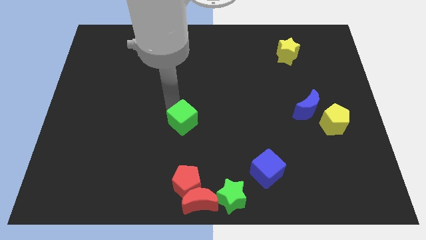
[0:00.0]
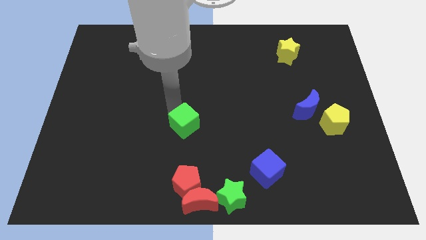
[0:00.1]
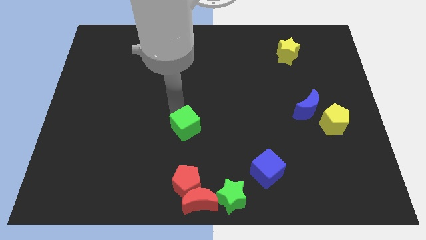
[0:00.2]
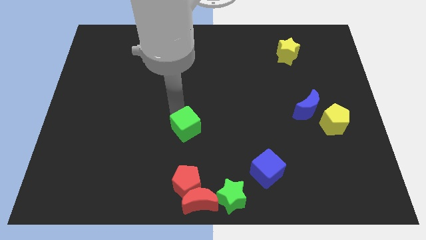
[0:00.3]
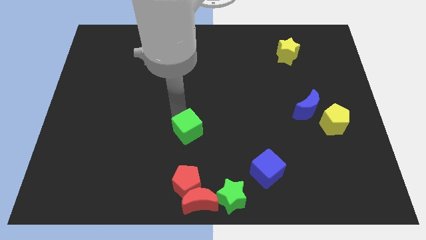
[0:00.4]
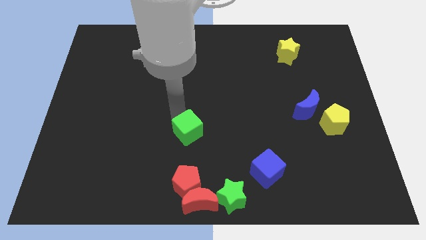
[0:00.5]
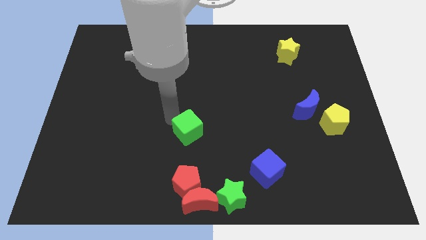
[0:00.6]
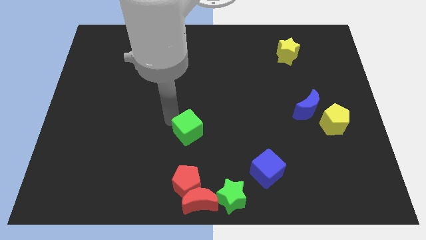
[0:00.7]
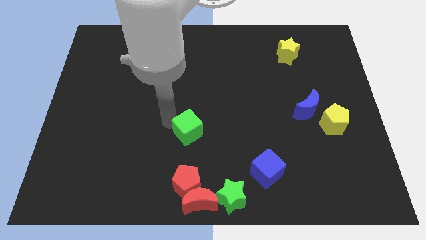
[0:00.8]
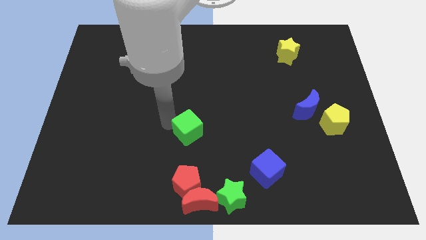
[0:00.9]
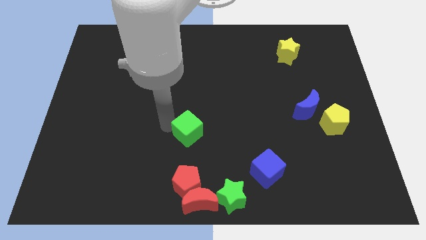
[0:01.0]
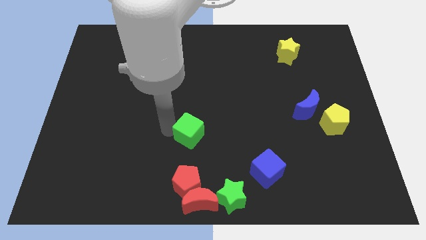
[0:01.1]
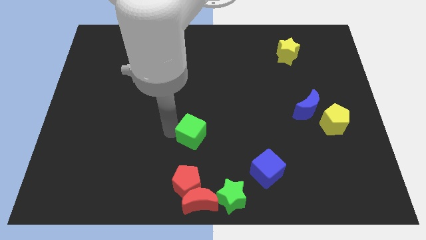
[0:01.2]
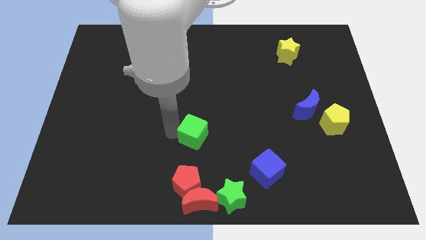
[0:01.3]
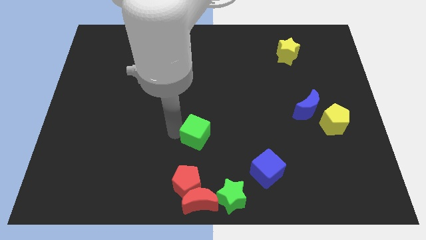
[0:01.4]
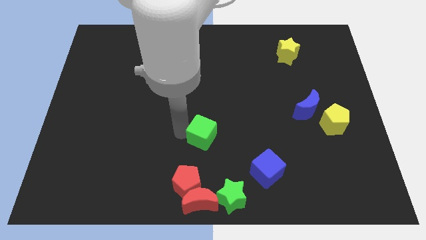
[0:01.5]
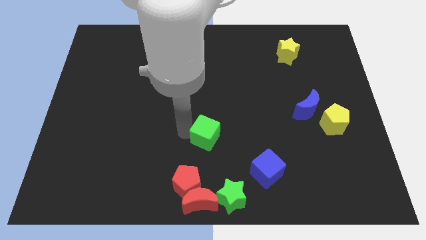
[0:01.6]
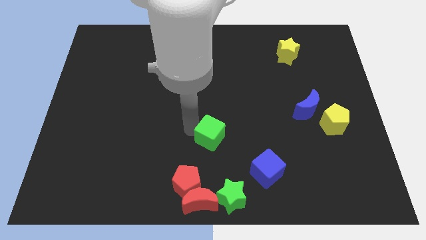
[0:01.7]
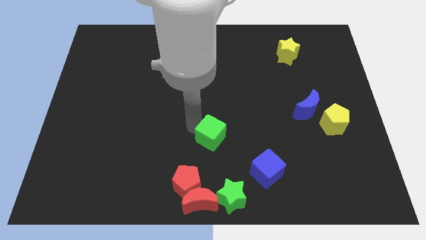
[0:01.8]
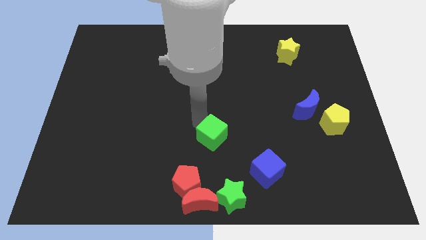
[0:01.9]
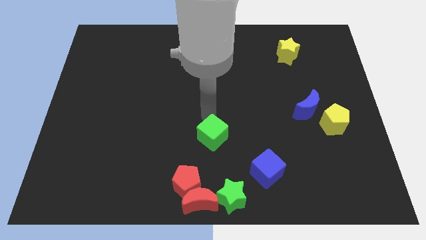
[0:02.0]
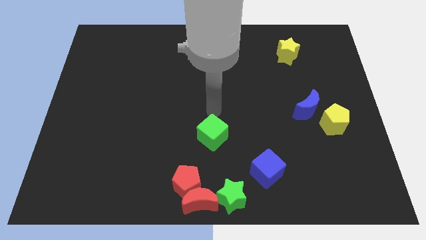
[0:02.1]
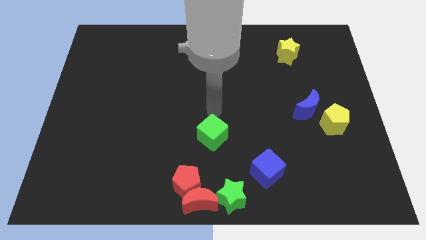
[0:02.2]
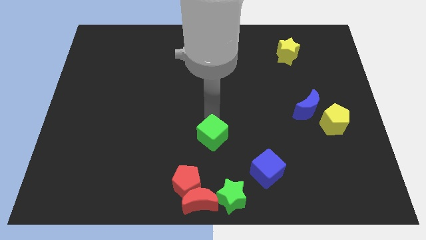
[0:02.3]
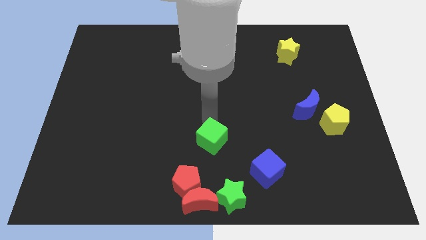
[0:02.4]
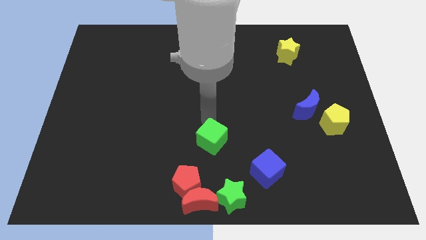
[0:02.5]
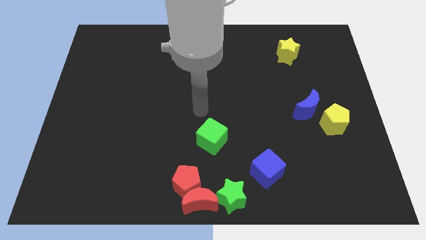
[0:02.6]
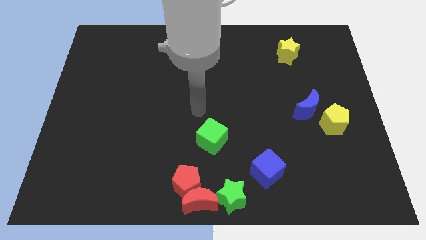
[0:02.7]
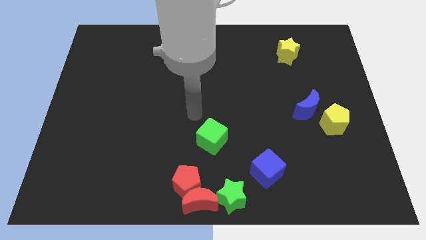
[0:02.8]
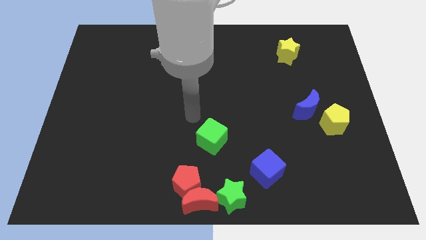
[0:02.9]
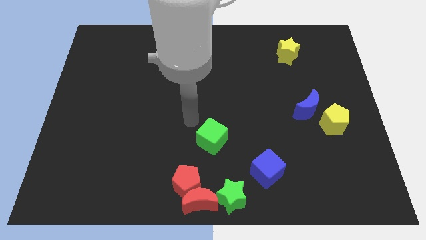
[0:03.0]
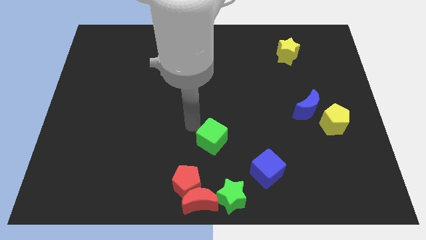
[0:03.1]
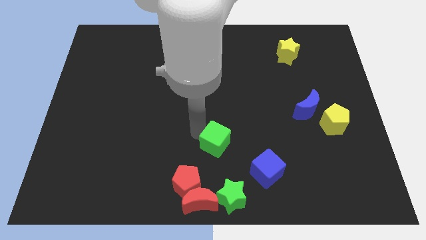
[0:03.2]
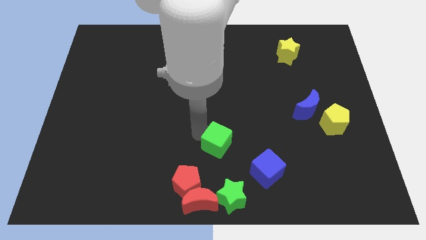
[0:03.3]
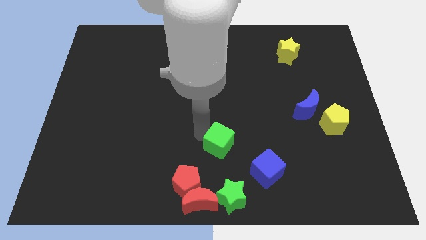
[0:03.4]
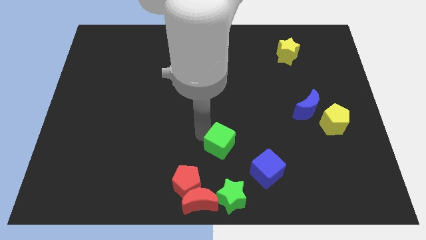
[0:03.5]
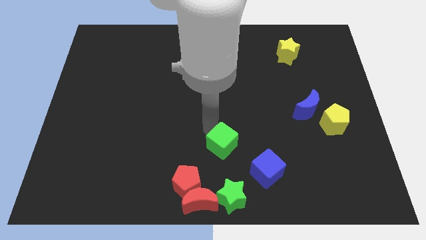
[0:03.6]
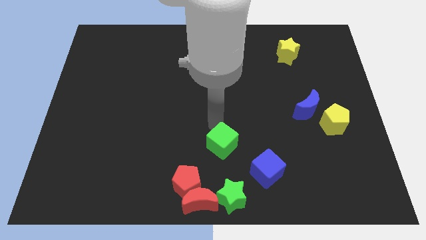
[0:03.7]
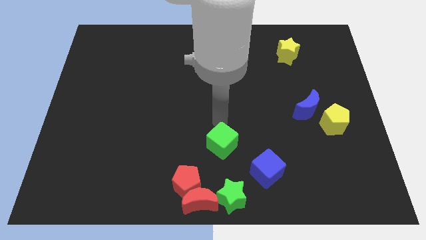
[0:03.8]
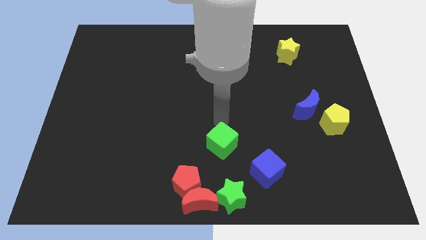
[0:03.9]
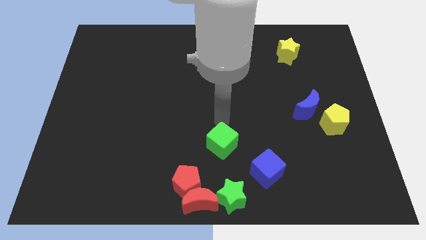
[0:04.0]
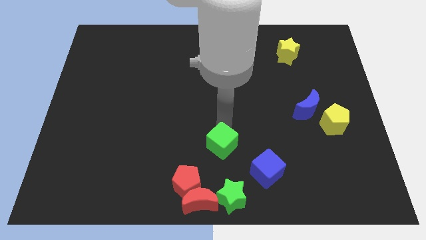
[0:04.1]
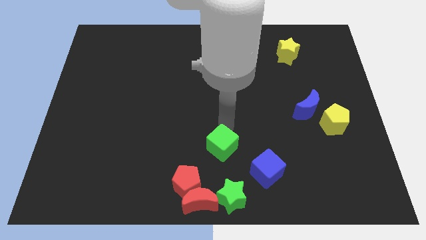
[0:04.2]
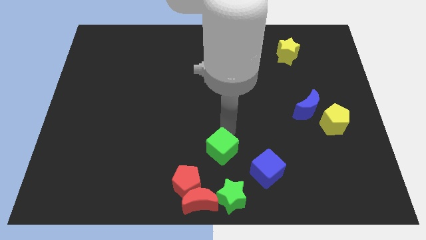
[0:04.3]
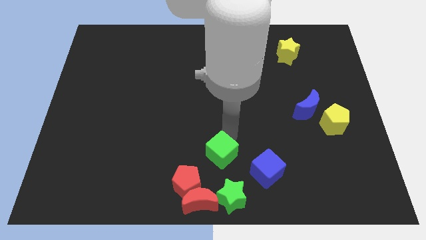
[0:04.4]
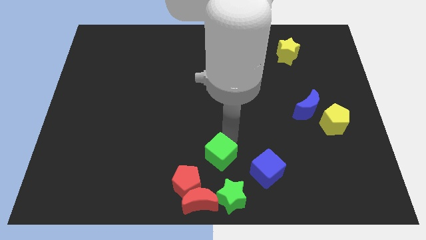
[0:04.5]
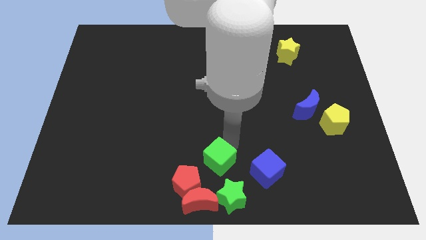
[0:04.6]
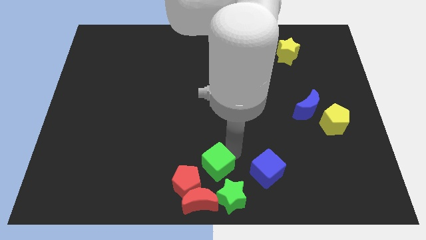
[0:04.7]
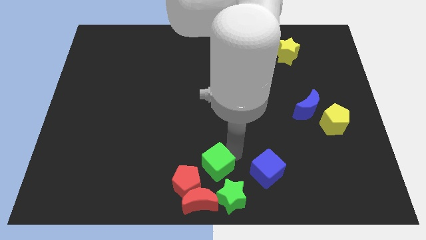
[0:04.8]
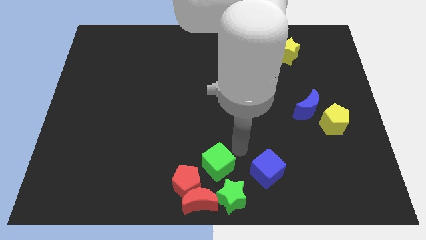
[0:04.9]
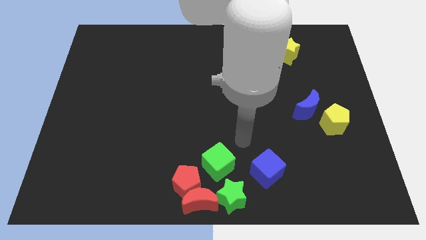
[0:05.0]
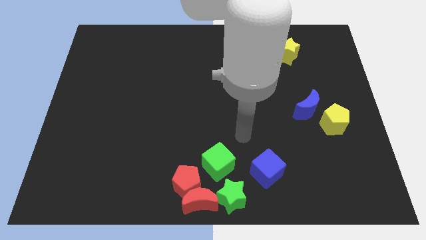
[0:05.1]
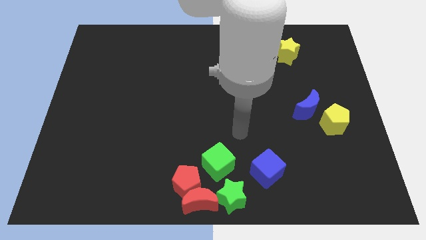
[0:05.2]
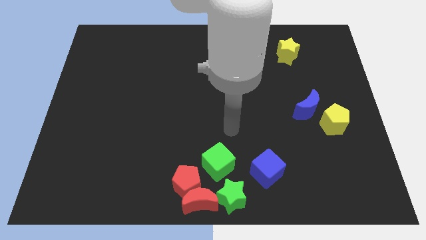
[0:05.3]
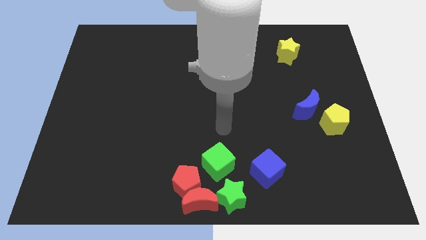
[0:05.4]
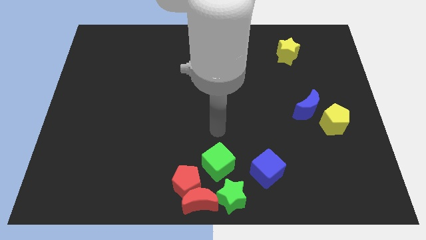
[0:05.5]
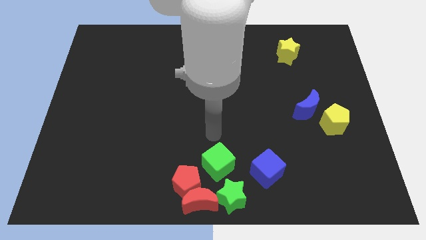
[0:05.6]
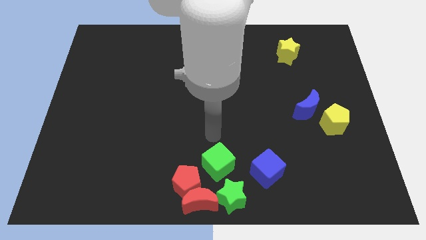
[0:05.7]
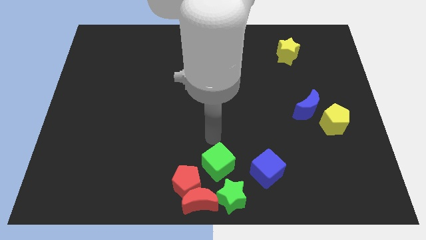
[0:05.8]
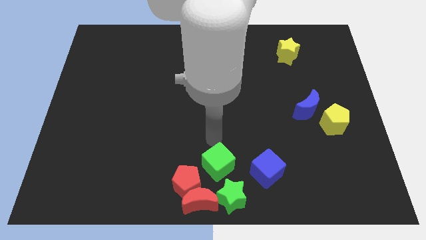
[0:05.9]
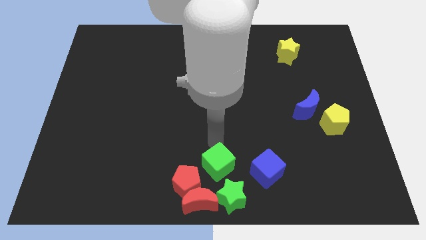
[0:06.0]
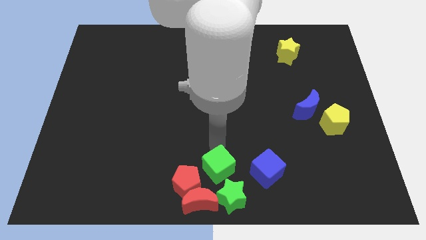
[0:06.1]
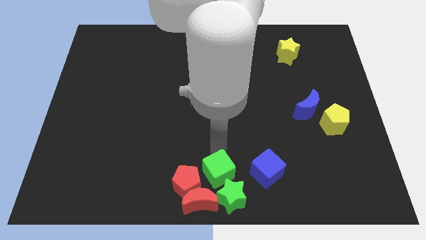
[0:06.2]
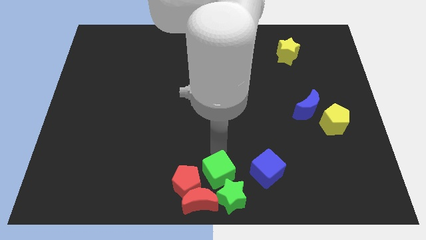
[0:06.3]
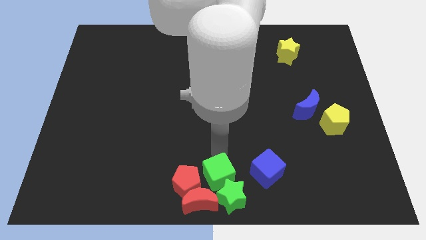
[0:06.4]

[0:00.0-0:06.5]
place the green cube above the green star

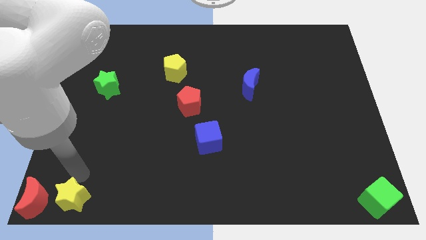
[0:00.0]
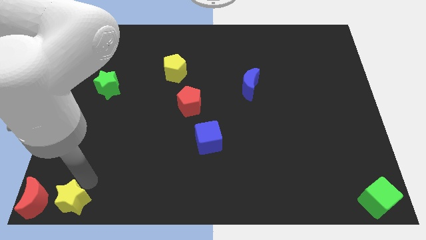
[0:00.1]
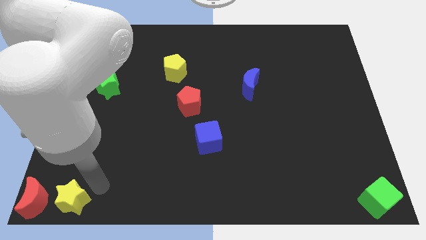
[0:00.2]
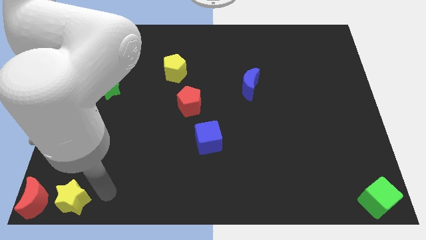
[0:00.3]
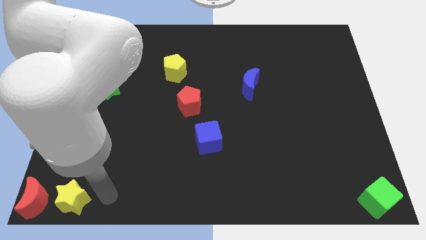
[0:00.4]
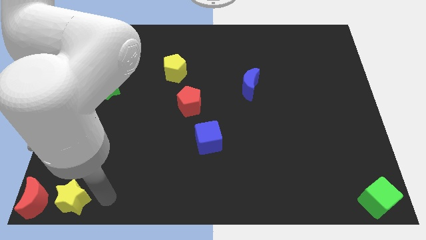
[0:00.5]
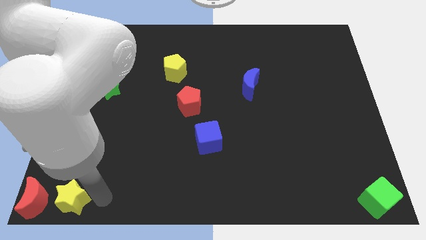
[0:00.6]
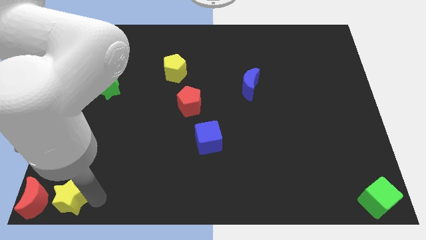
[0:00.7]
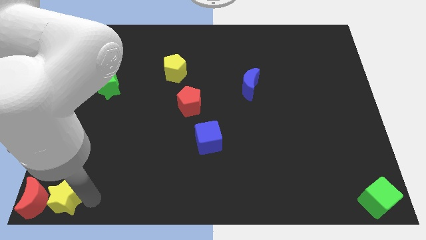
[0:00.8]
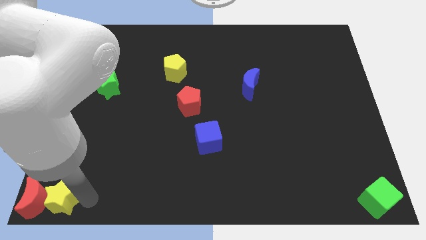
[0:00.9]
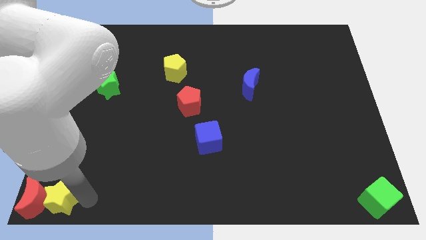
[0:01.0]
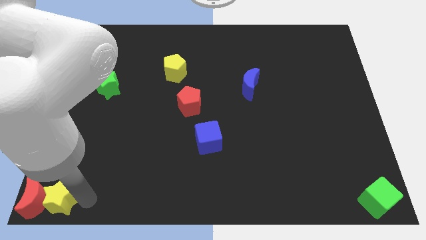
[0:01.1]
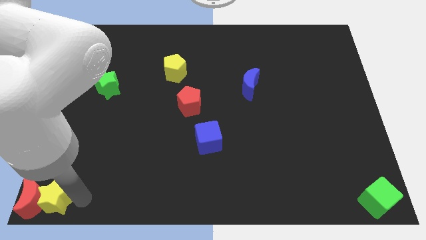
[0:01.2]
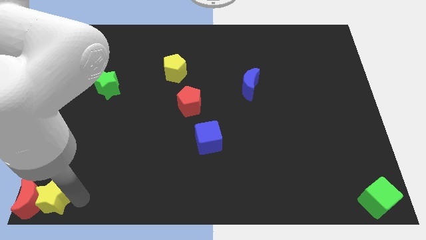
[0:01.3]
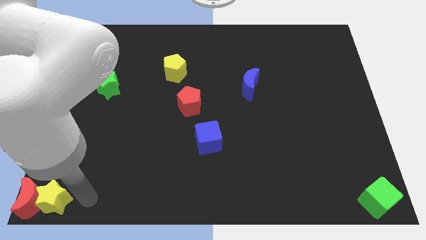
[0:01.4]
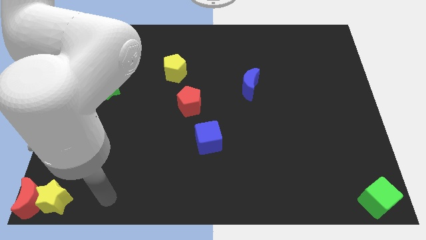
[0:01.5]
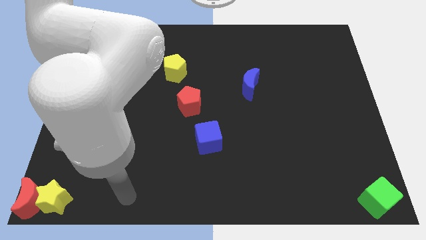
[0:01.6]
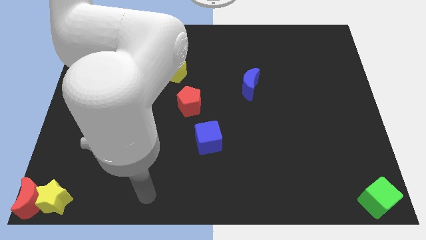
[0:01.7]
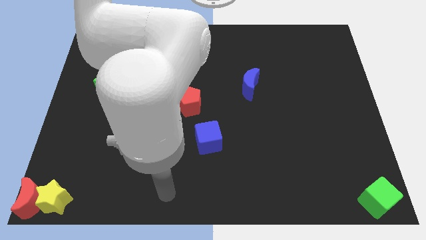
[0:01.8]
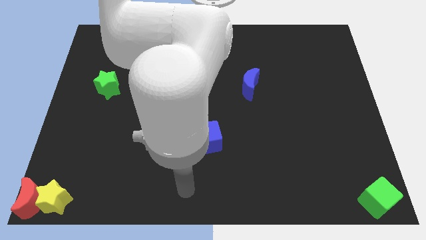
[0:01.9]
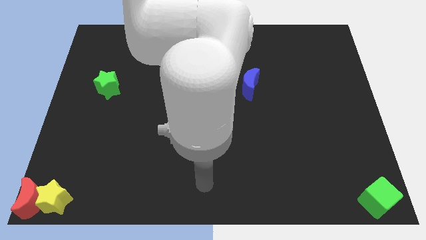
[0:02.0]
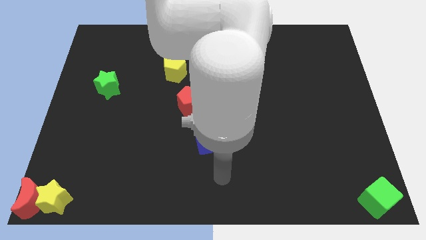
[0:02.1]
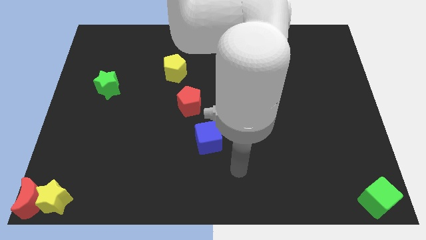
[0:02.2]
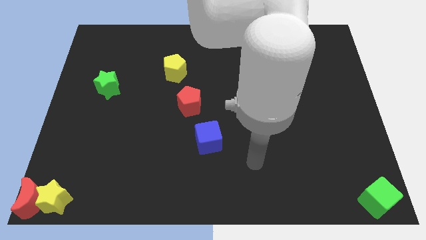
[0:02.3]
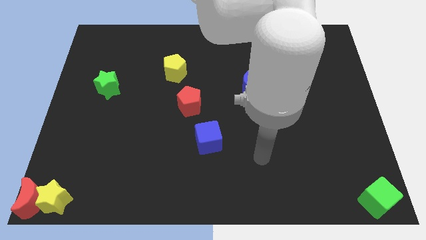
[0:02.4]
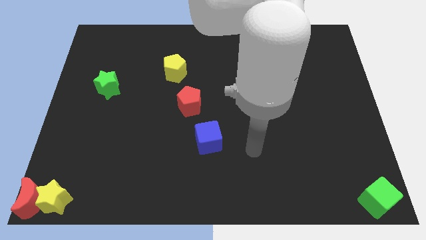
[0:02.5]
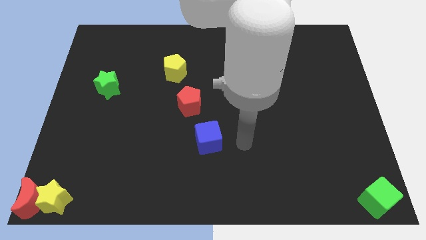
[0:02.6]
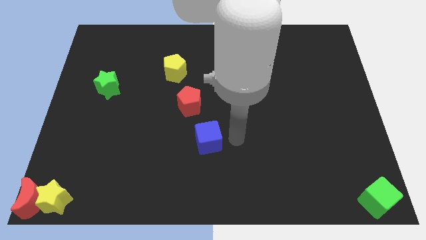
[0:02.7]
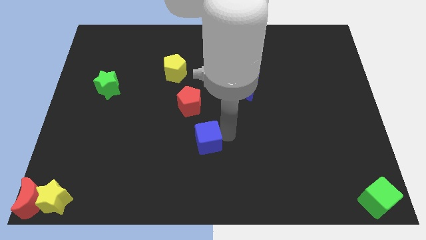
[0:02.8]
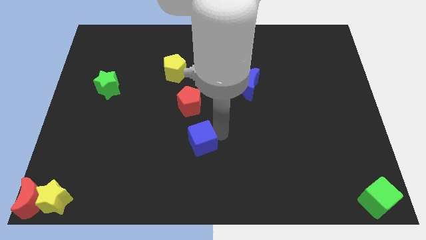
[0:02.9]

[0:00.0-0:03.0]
place the arm right to the blue cube
